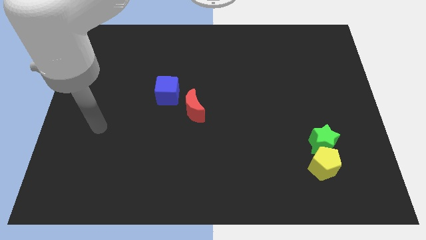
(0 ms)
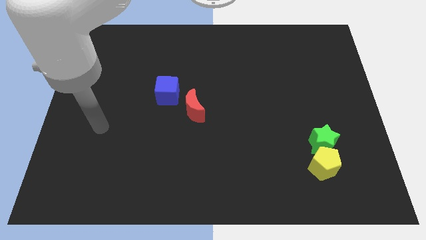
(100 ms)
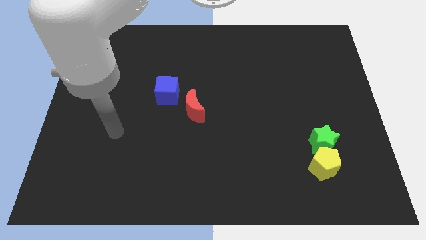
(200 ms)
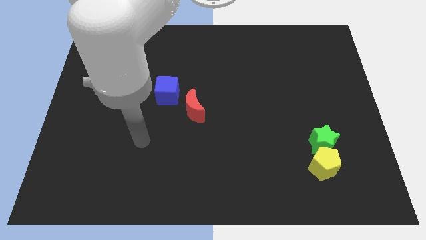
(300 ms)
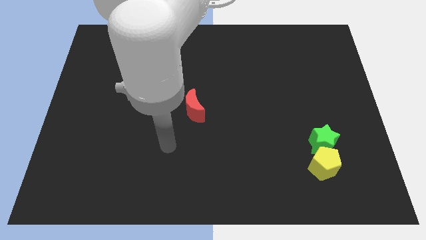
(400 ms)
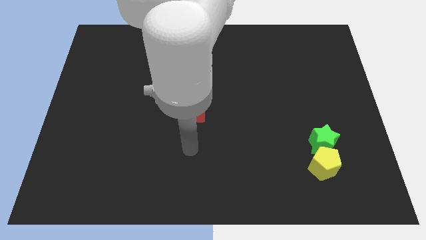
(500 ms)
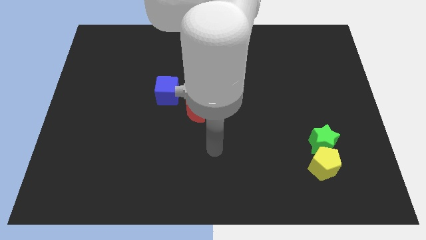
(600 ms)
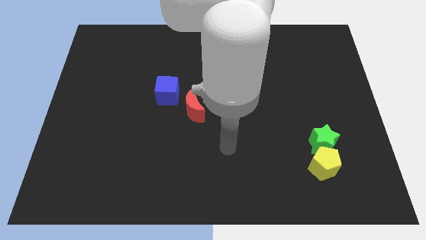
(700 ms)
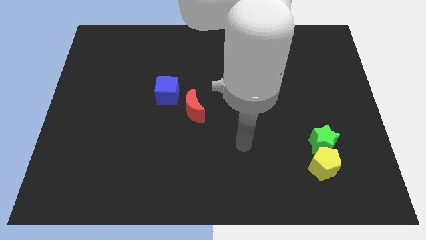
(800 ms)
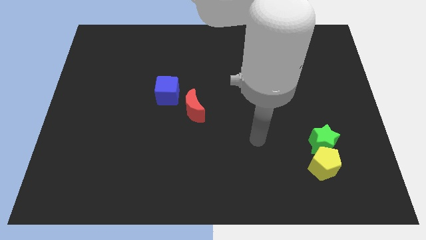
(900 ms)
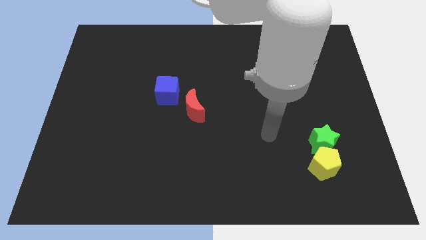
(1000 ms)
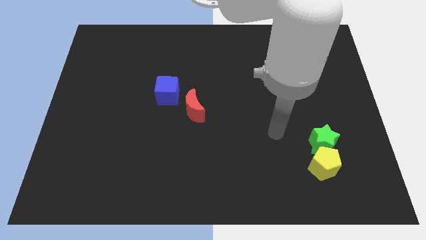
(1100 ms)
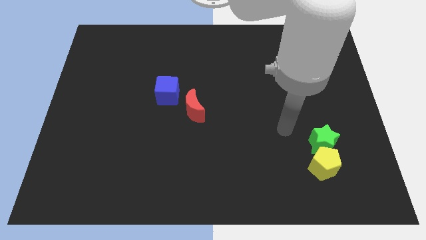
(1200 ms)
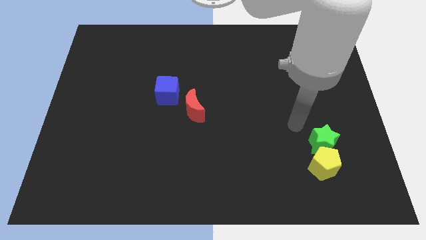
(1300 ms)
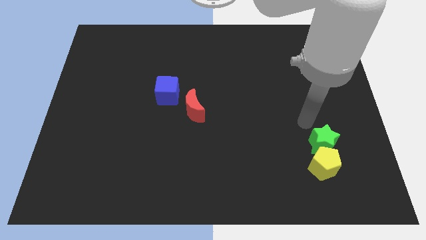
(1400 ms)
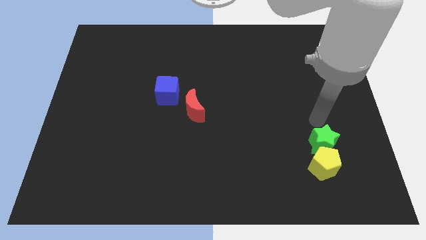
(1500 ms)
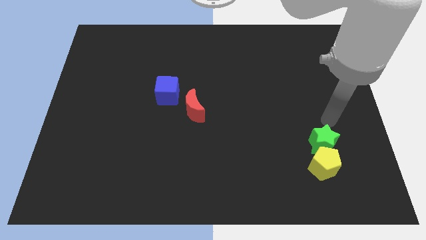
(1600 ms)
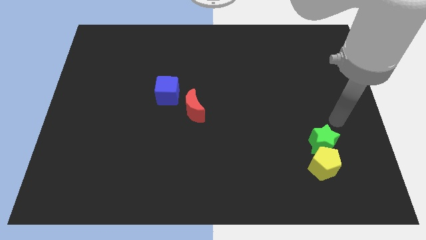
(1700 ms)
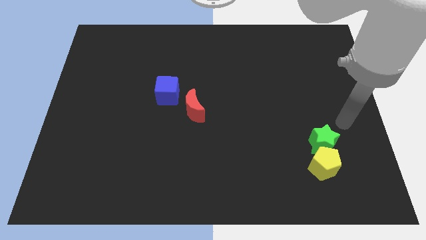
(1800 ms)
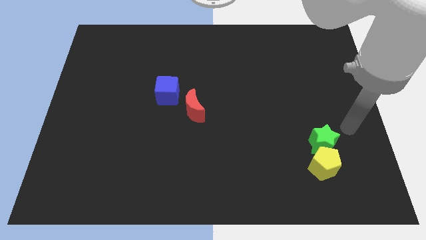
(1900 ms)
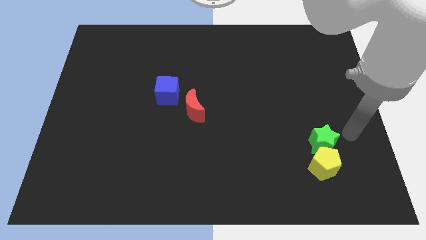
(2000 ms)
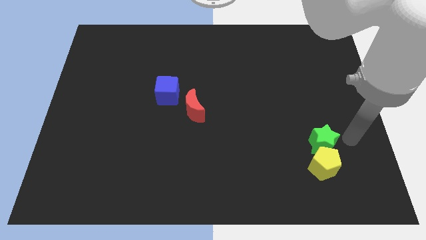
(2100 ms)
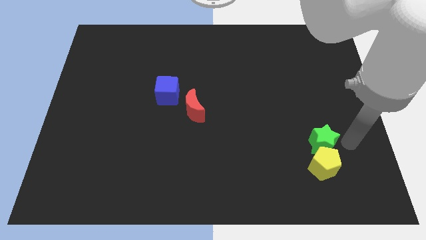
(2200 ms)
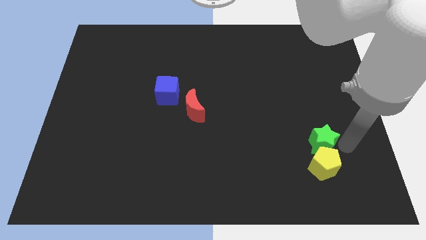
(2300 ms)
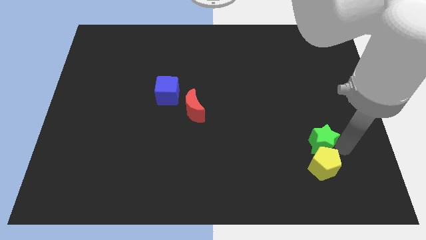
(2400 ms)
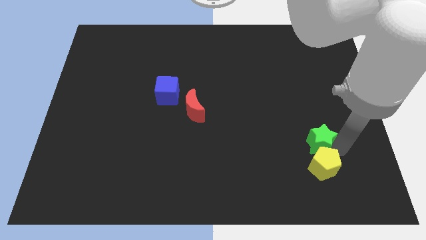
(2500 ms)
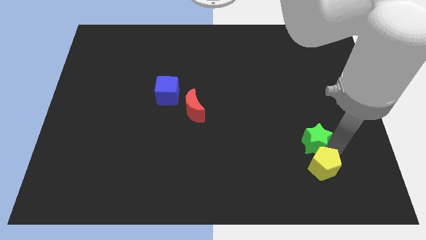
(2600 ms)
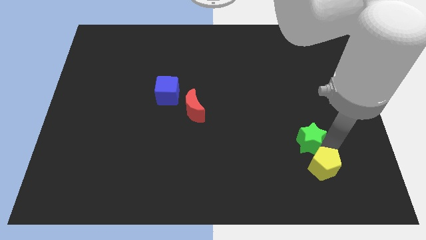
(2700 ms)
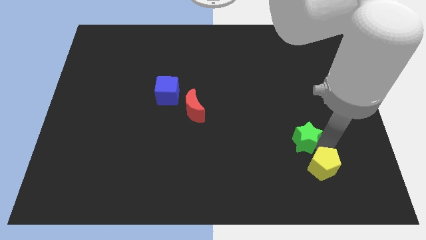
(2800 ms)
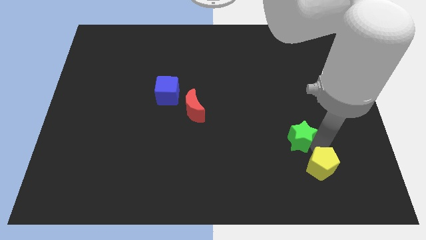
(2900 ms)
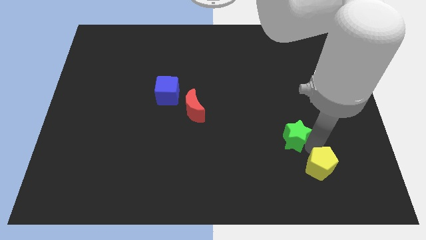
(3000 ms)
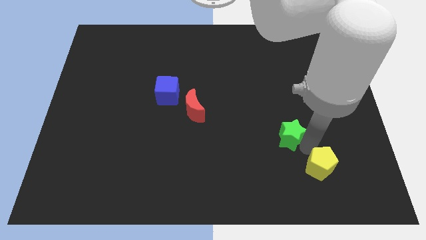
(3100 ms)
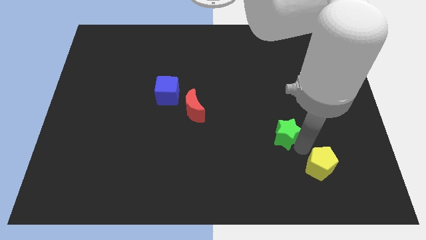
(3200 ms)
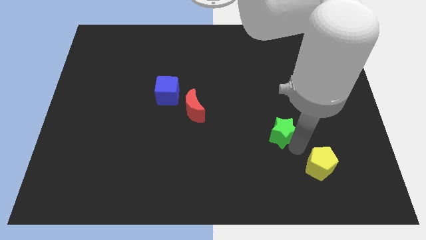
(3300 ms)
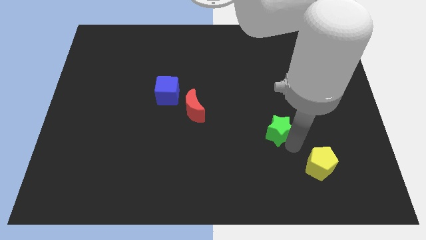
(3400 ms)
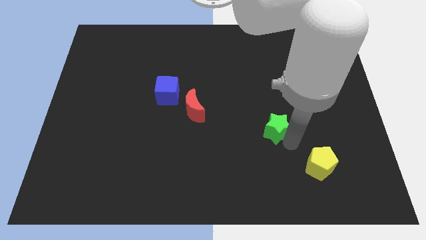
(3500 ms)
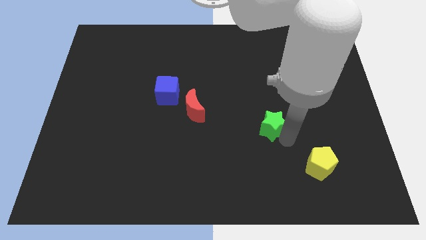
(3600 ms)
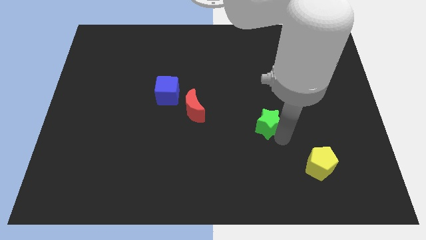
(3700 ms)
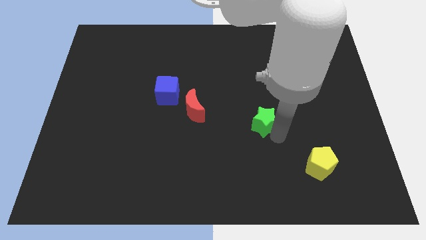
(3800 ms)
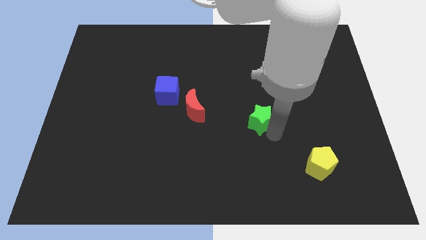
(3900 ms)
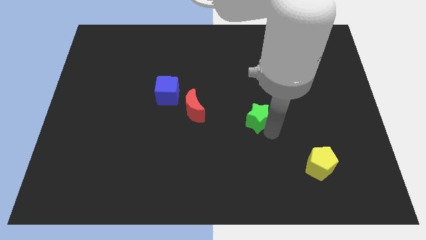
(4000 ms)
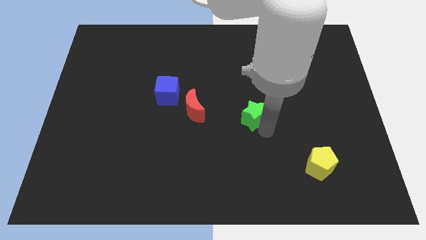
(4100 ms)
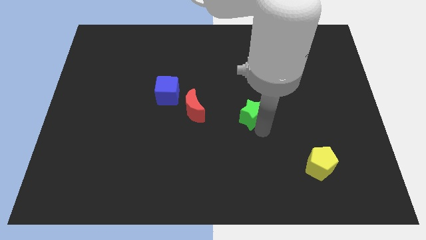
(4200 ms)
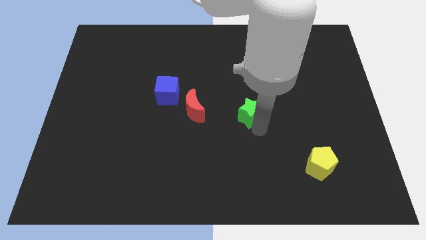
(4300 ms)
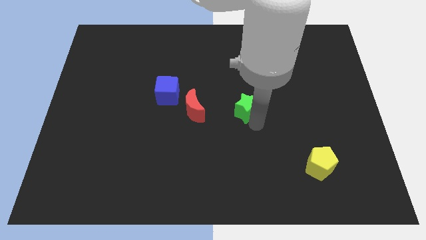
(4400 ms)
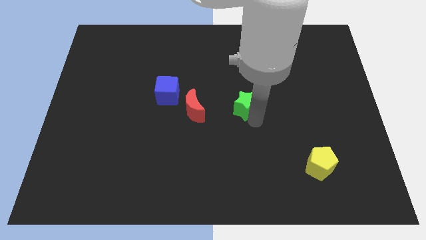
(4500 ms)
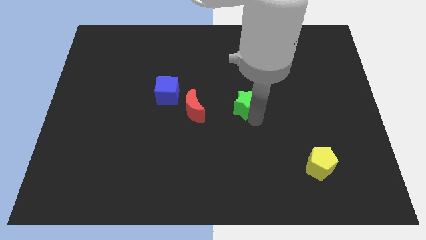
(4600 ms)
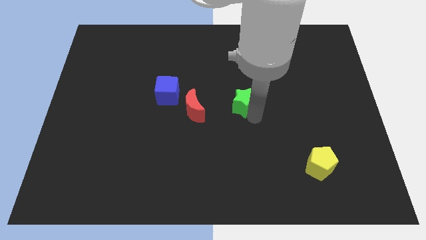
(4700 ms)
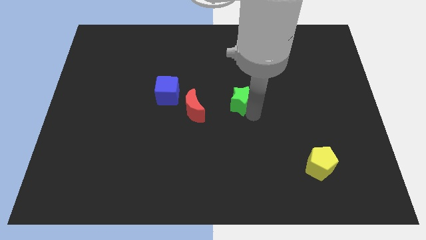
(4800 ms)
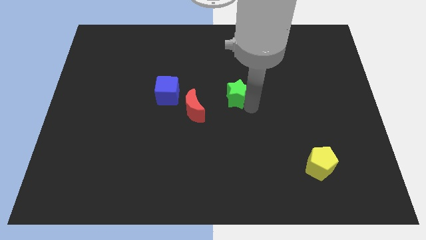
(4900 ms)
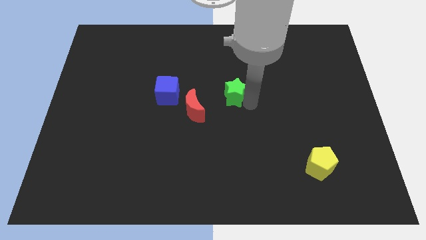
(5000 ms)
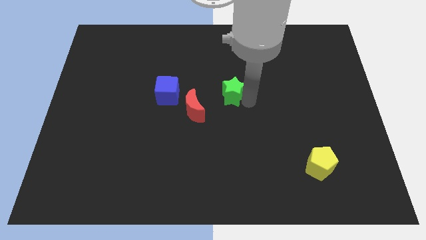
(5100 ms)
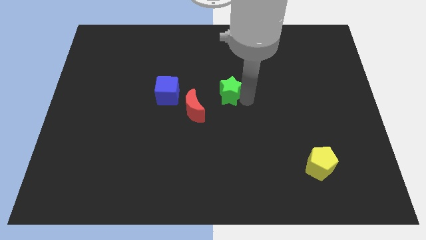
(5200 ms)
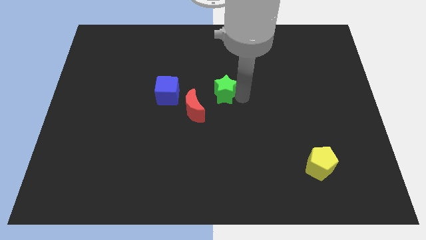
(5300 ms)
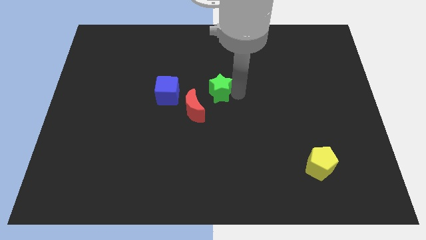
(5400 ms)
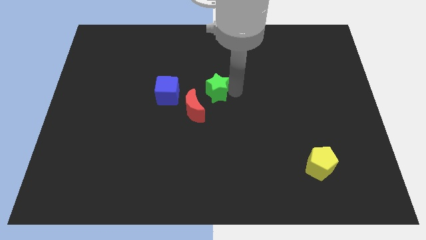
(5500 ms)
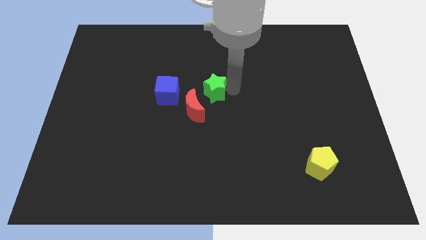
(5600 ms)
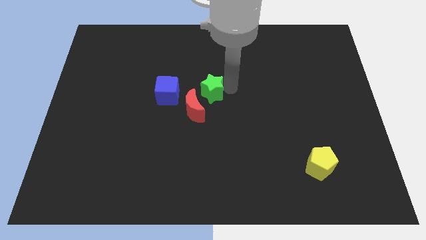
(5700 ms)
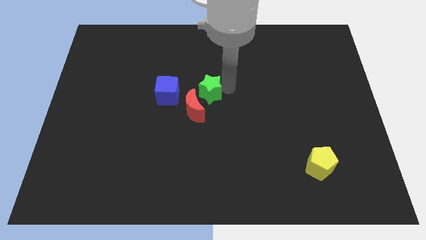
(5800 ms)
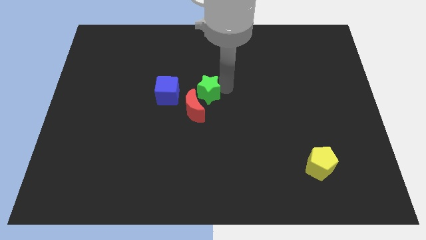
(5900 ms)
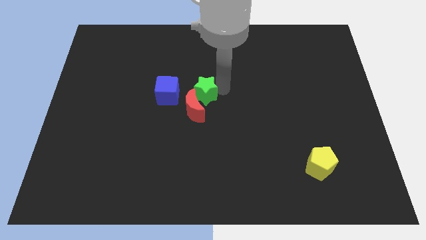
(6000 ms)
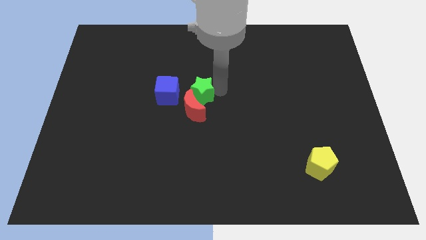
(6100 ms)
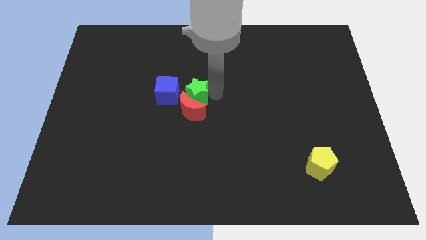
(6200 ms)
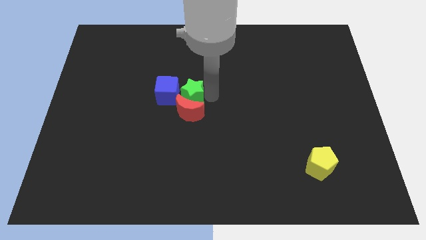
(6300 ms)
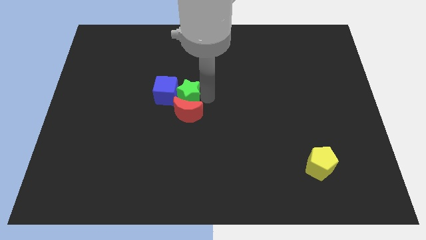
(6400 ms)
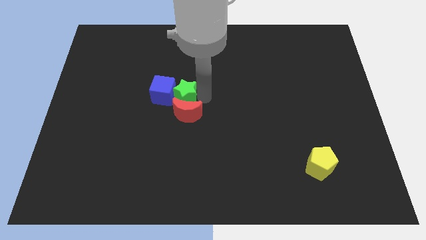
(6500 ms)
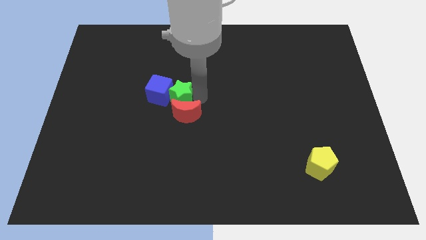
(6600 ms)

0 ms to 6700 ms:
move the green star to the cube

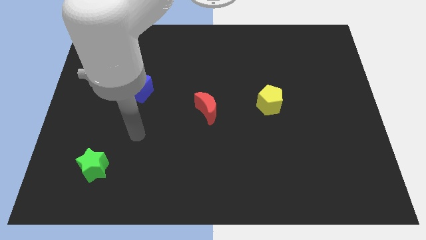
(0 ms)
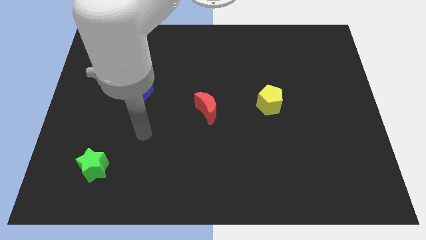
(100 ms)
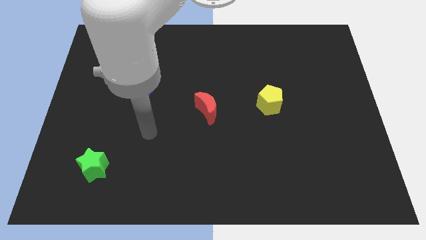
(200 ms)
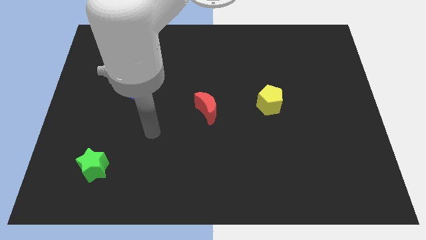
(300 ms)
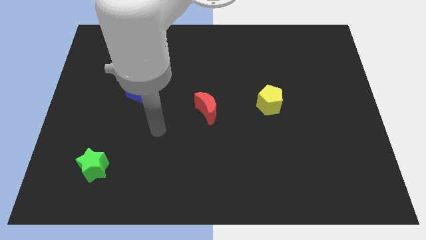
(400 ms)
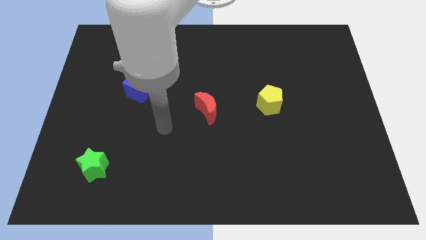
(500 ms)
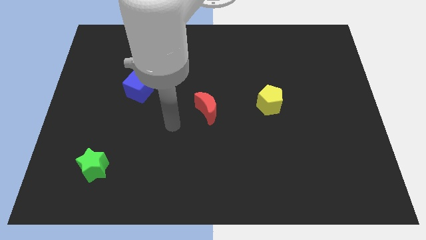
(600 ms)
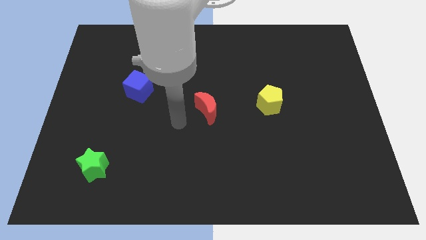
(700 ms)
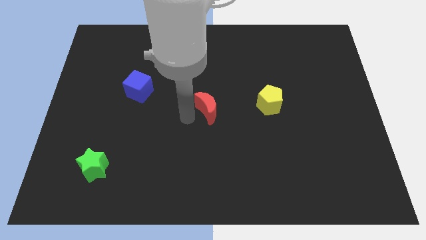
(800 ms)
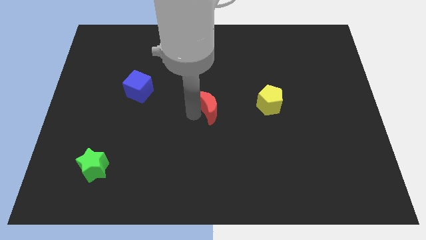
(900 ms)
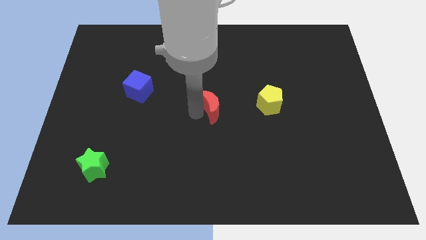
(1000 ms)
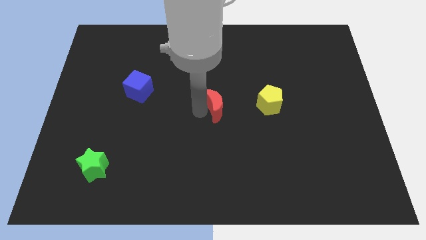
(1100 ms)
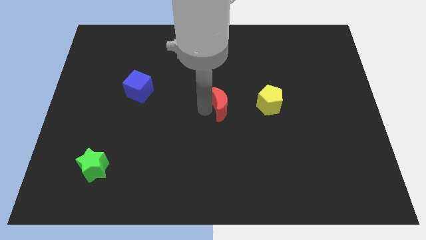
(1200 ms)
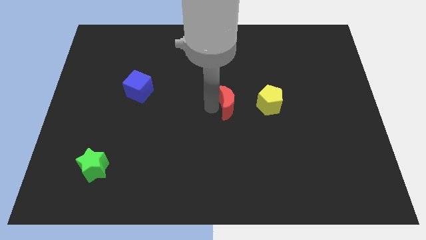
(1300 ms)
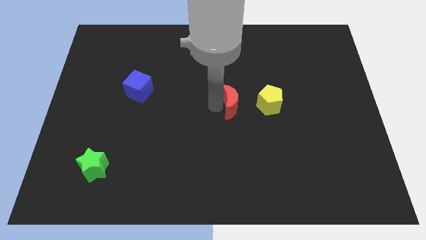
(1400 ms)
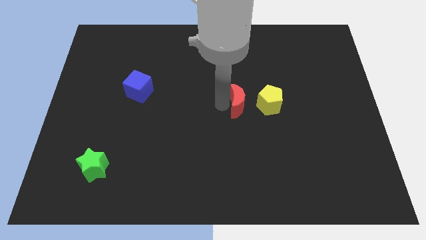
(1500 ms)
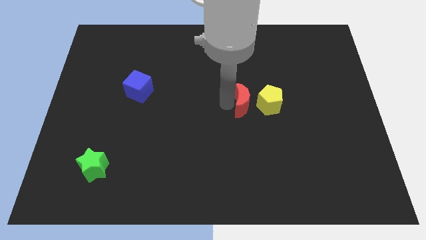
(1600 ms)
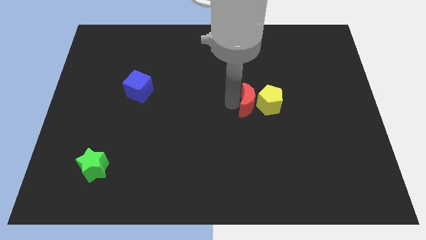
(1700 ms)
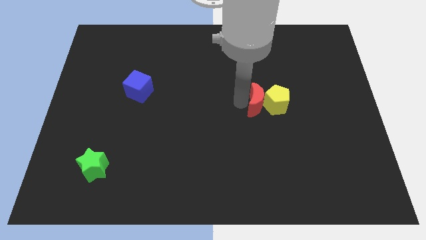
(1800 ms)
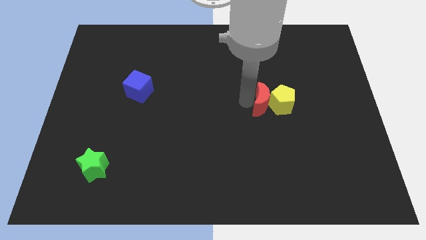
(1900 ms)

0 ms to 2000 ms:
slide the red moon close to the yellow block
